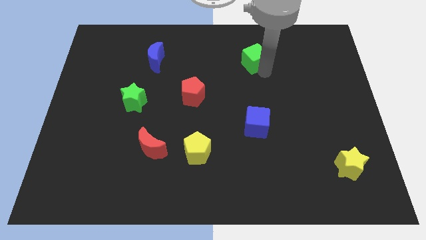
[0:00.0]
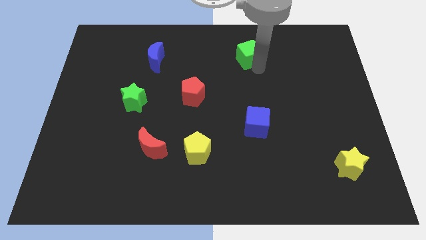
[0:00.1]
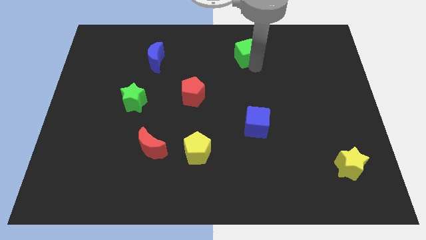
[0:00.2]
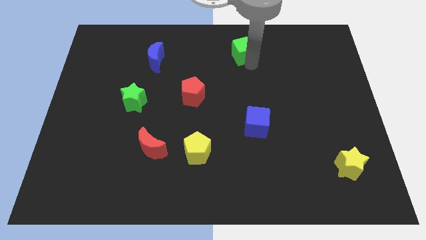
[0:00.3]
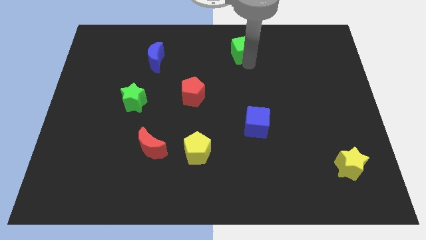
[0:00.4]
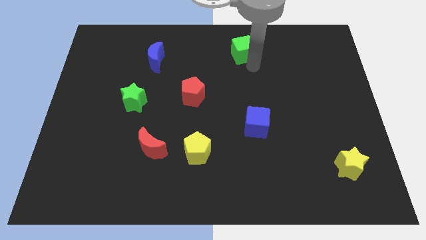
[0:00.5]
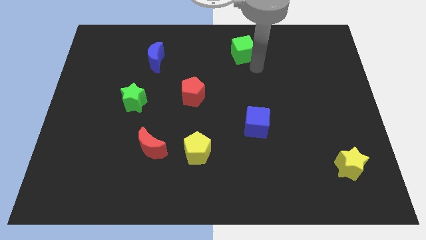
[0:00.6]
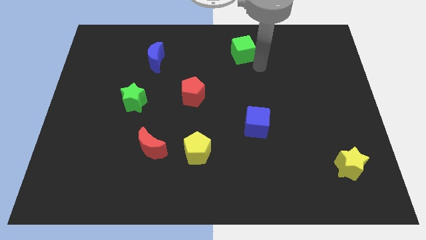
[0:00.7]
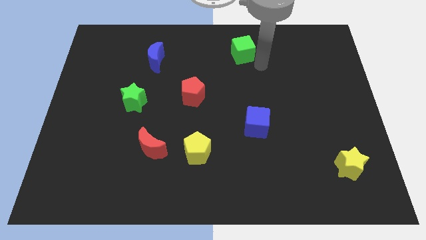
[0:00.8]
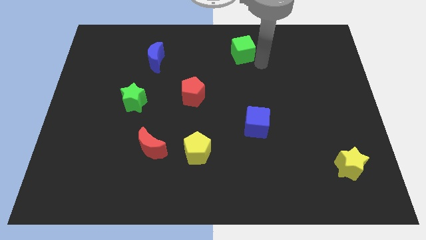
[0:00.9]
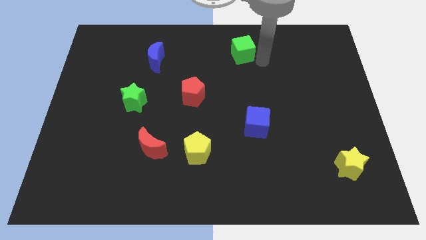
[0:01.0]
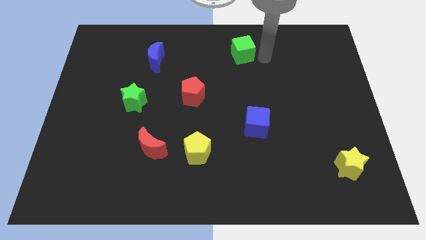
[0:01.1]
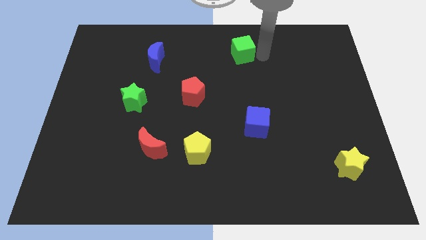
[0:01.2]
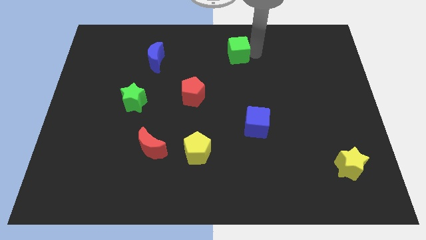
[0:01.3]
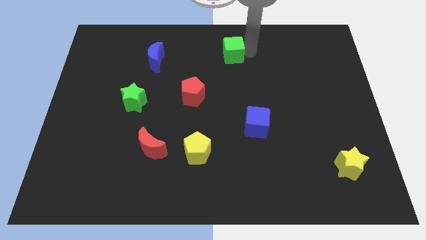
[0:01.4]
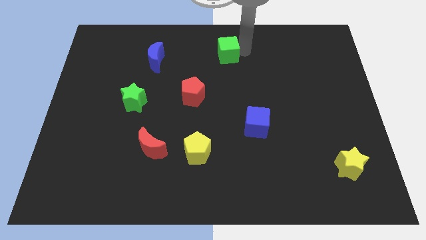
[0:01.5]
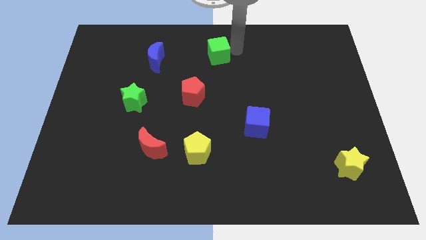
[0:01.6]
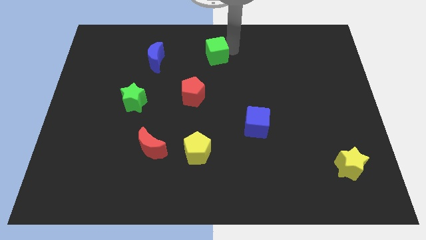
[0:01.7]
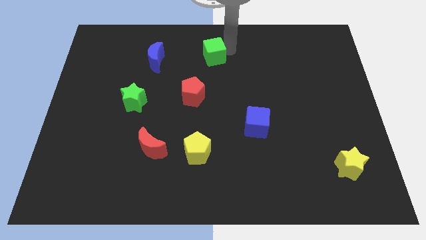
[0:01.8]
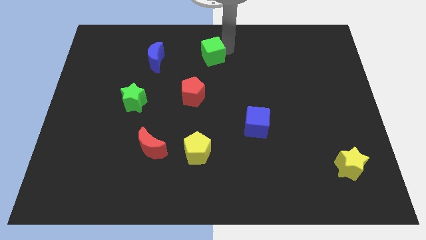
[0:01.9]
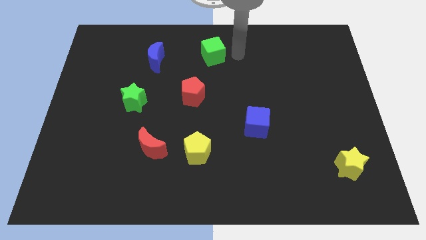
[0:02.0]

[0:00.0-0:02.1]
slide green cube towards top center

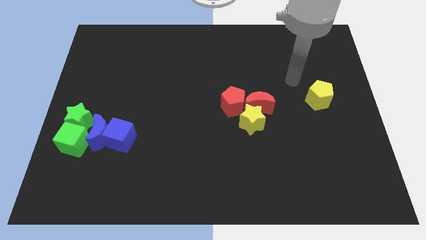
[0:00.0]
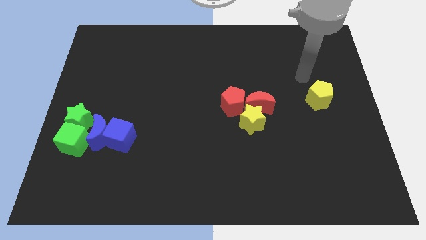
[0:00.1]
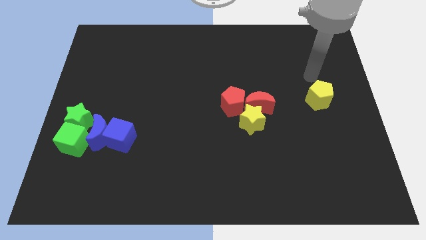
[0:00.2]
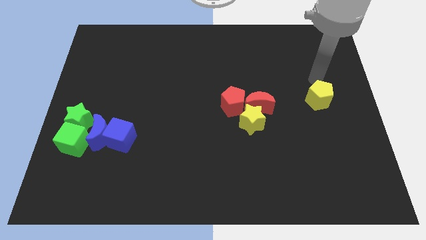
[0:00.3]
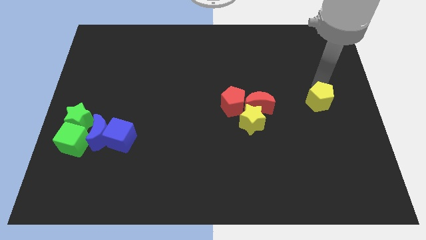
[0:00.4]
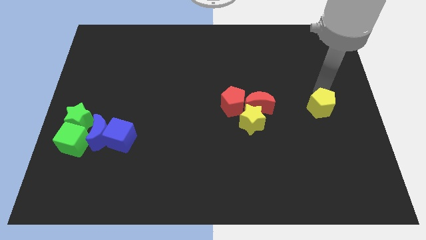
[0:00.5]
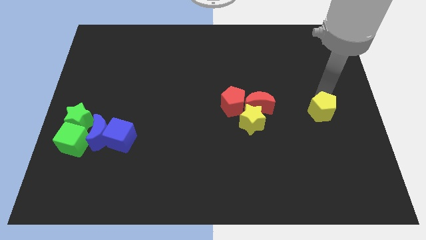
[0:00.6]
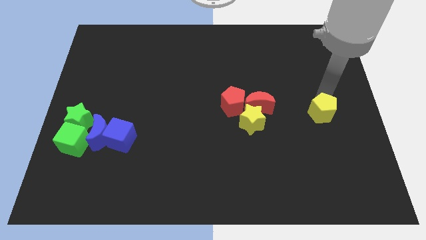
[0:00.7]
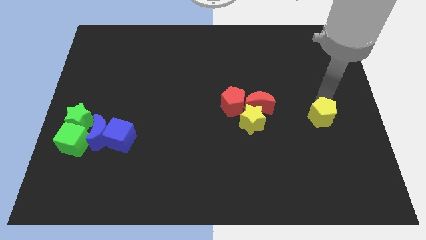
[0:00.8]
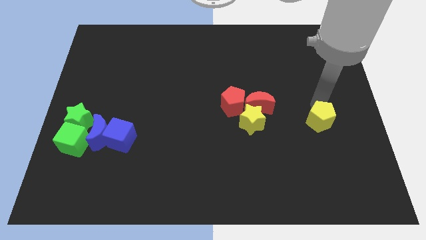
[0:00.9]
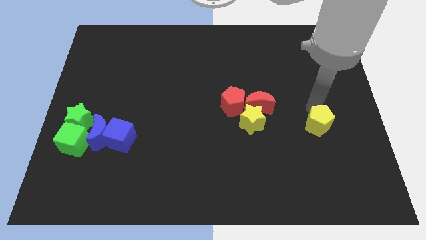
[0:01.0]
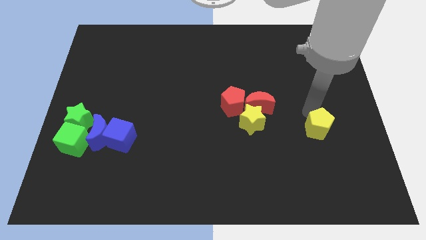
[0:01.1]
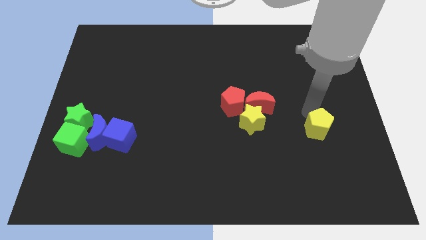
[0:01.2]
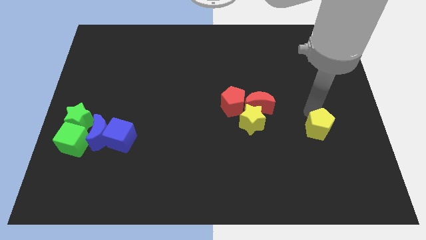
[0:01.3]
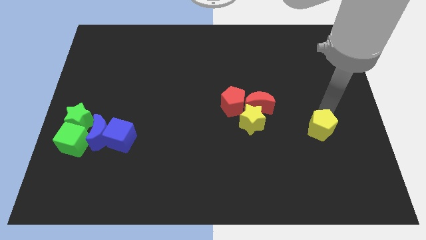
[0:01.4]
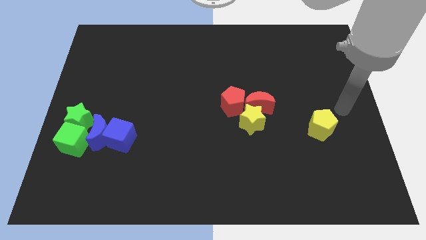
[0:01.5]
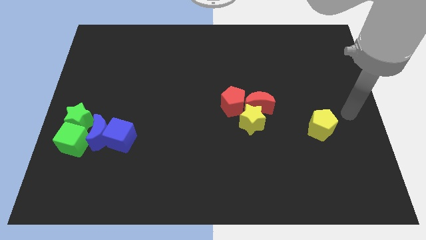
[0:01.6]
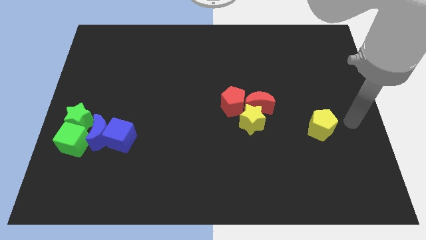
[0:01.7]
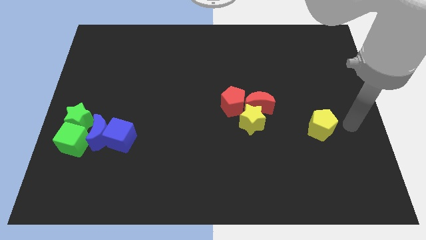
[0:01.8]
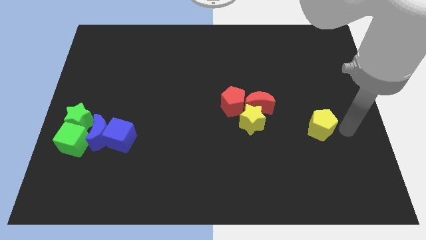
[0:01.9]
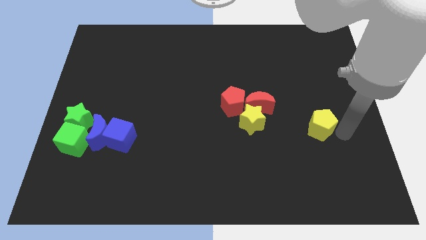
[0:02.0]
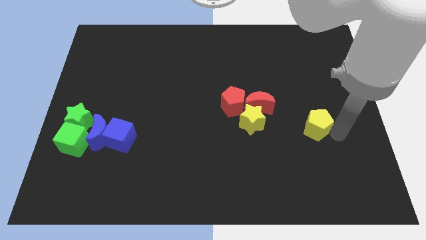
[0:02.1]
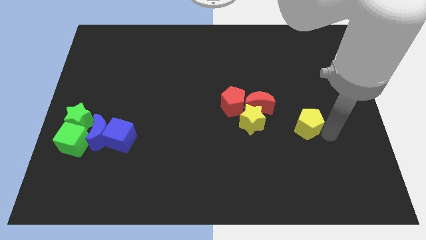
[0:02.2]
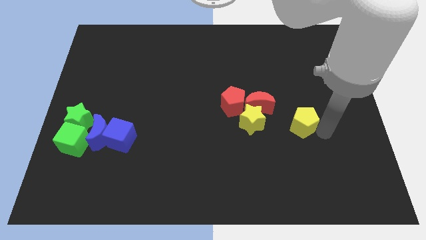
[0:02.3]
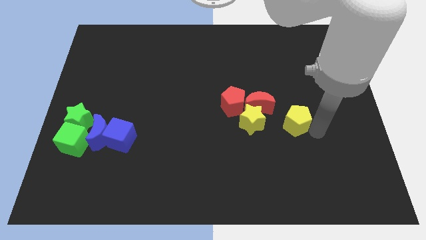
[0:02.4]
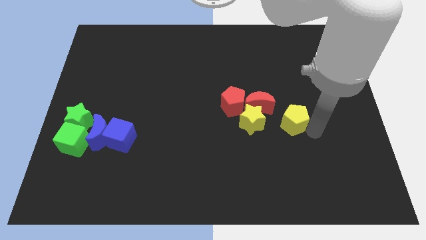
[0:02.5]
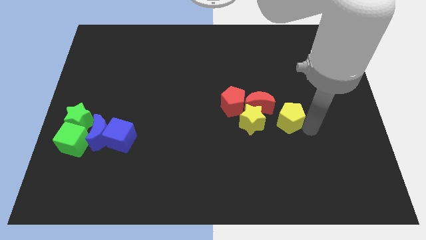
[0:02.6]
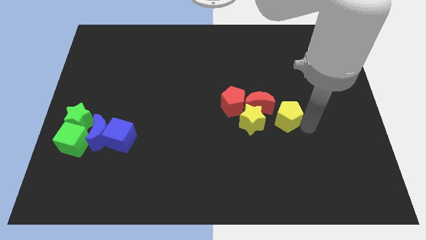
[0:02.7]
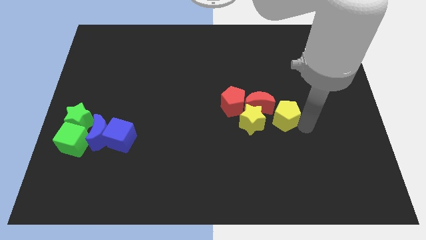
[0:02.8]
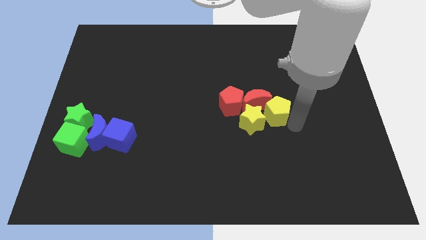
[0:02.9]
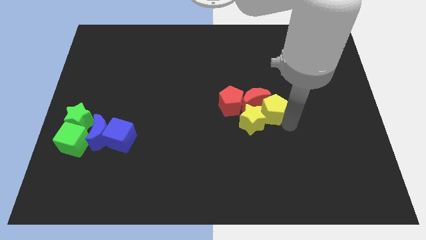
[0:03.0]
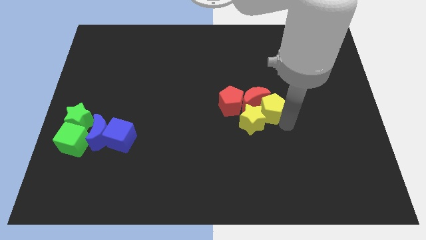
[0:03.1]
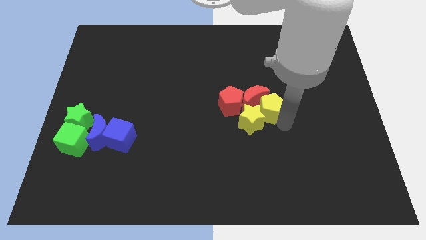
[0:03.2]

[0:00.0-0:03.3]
move the yellow pentagon to the right side of the yellow star

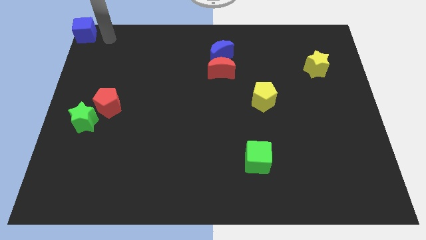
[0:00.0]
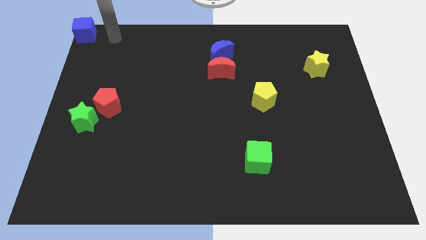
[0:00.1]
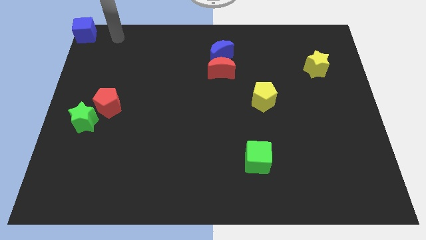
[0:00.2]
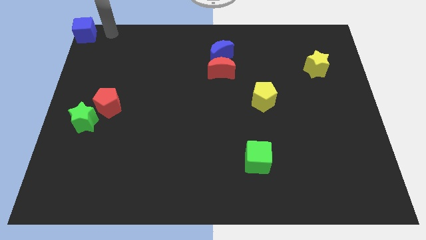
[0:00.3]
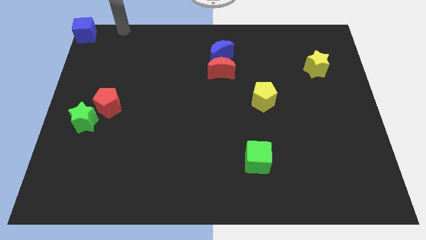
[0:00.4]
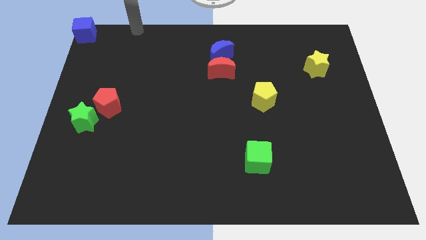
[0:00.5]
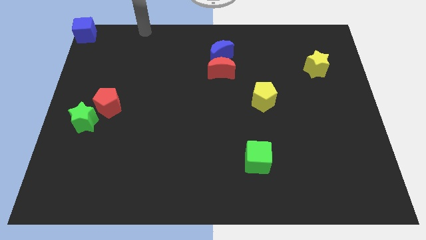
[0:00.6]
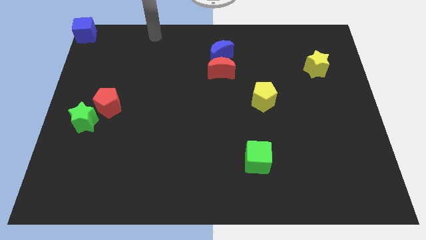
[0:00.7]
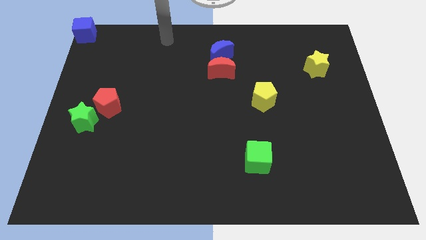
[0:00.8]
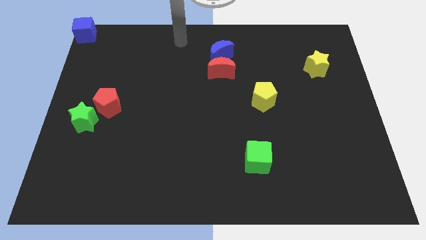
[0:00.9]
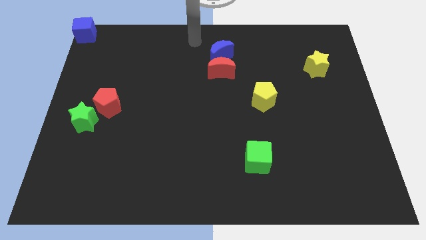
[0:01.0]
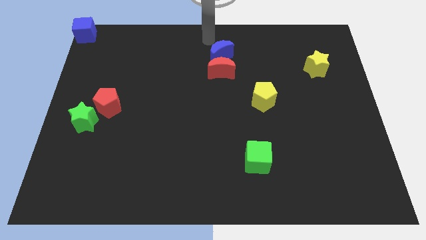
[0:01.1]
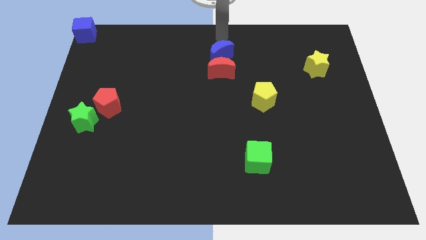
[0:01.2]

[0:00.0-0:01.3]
point your arm at the top of the blue crescent

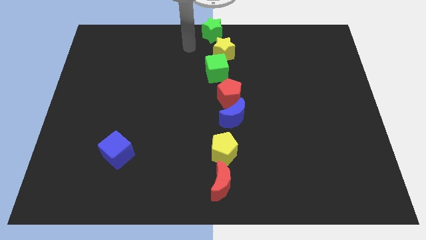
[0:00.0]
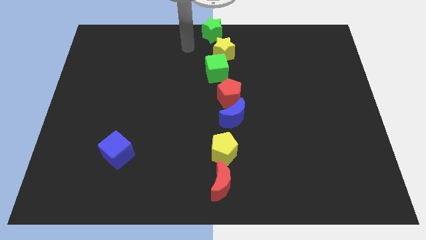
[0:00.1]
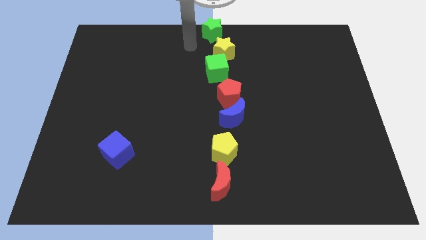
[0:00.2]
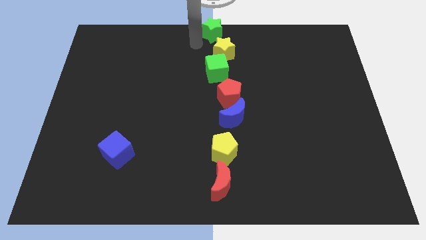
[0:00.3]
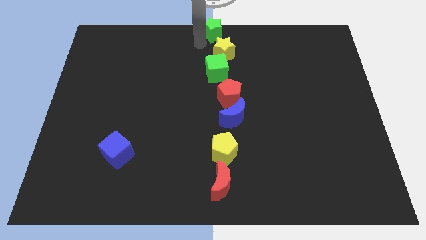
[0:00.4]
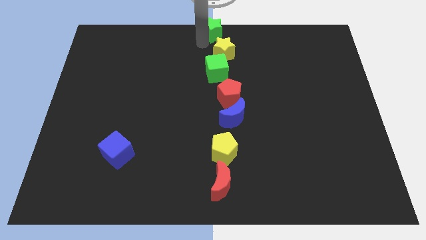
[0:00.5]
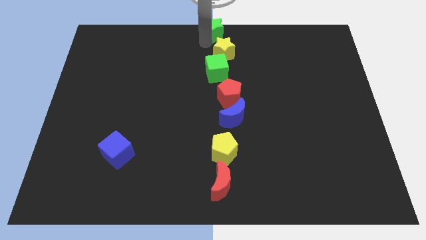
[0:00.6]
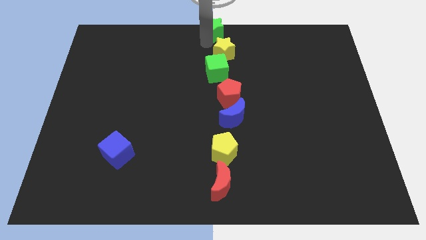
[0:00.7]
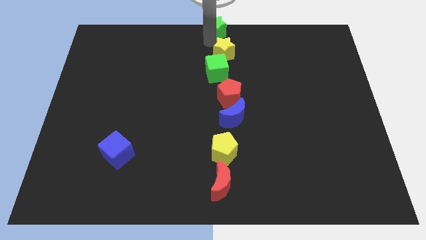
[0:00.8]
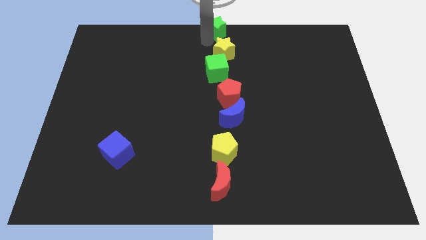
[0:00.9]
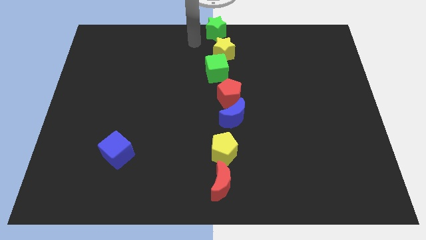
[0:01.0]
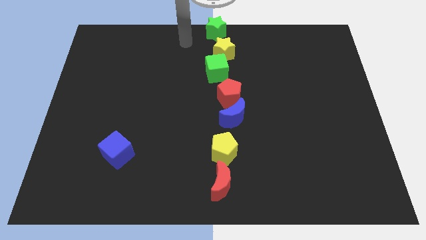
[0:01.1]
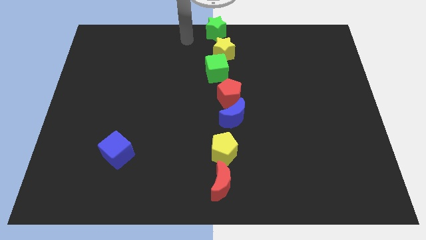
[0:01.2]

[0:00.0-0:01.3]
push the green star to the top center of the board

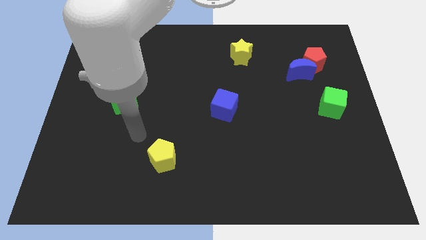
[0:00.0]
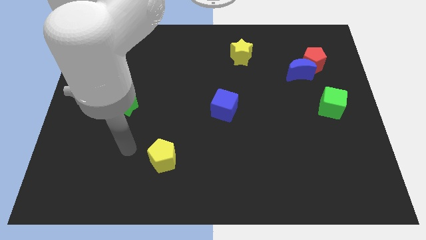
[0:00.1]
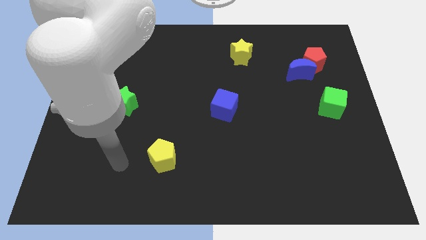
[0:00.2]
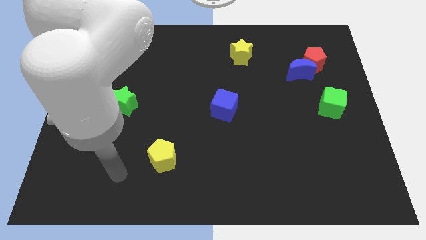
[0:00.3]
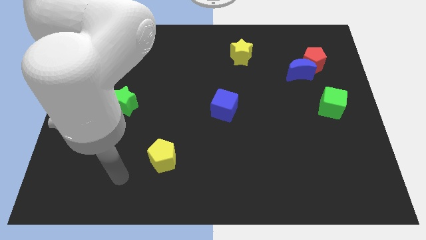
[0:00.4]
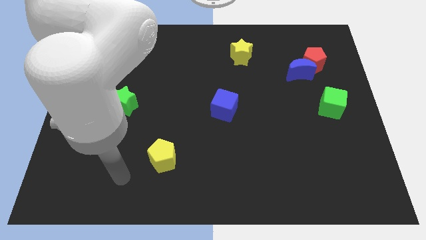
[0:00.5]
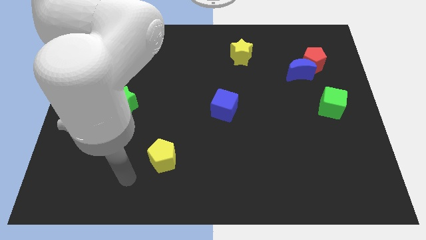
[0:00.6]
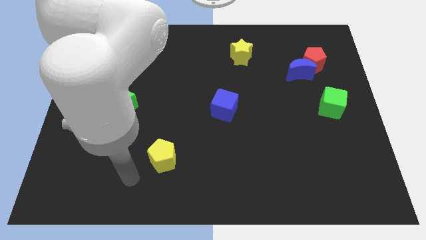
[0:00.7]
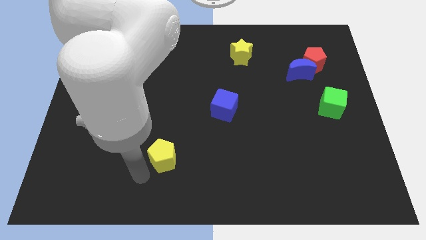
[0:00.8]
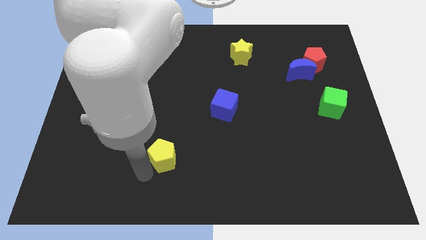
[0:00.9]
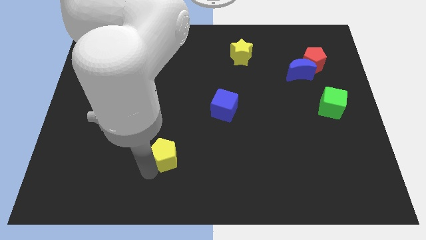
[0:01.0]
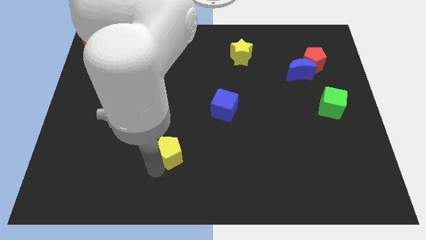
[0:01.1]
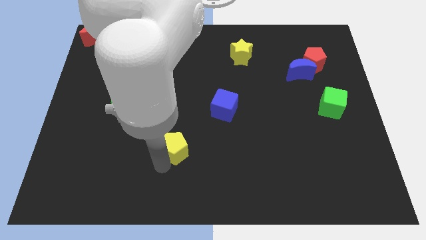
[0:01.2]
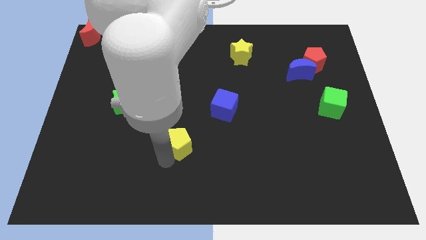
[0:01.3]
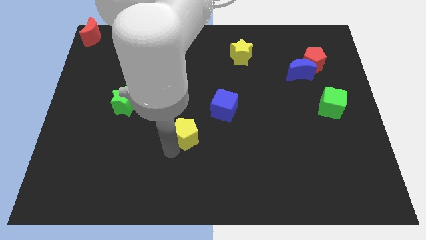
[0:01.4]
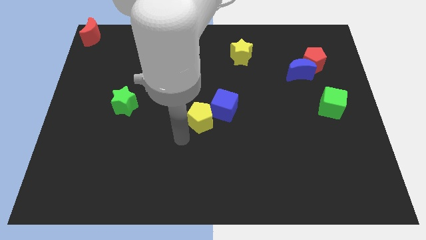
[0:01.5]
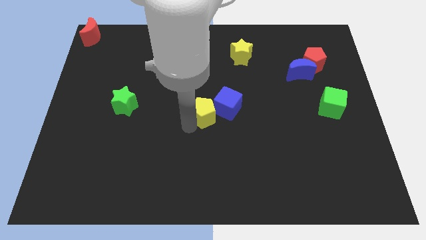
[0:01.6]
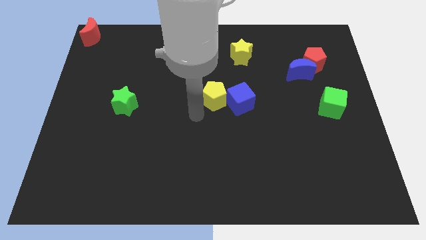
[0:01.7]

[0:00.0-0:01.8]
drag the yellow pentagon into the left side of the blue cube
